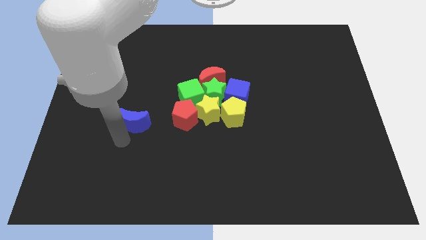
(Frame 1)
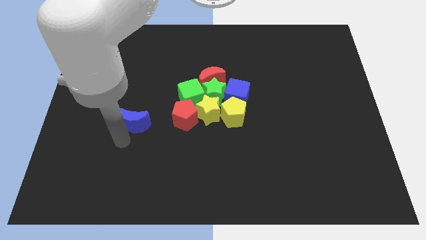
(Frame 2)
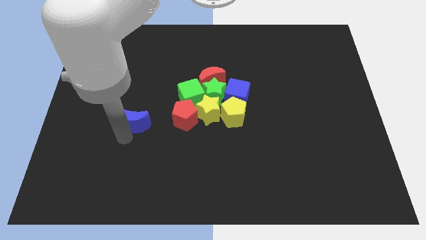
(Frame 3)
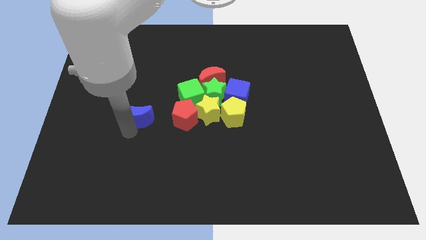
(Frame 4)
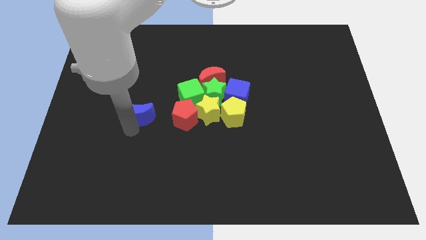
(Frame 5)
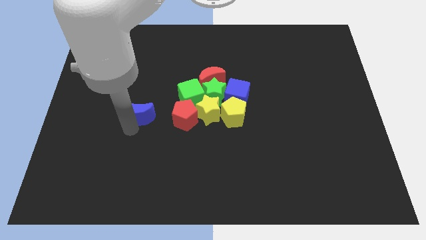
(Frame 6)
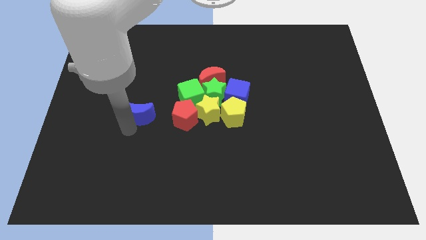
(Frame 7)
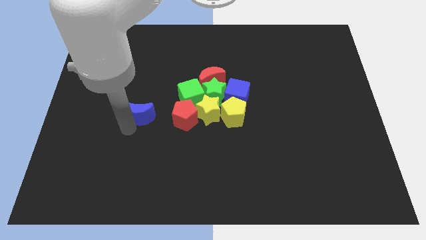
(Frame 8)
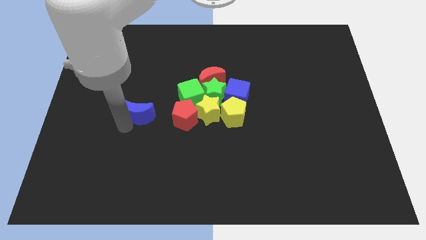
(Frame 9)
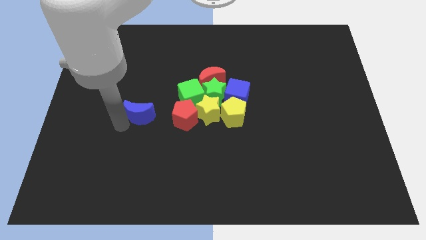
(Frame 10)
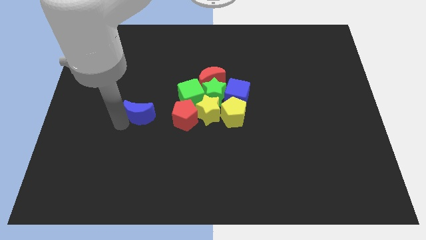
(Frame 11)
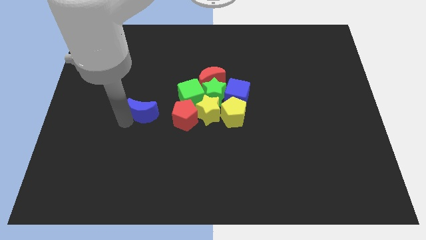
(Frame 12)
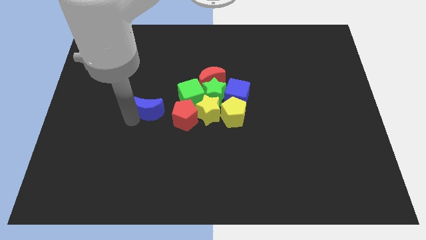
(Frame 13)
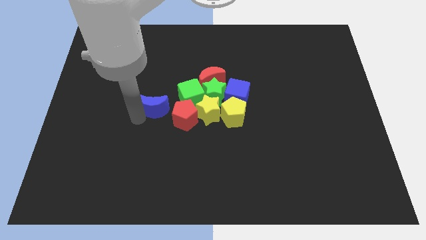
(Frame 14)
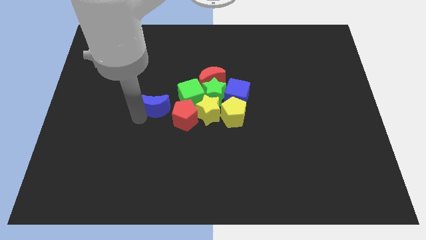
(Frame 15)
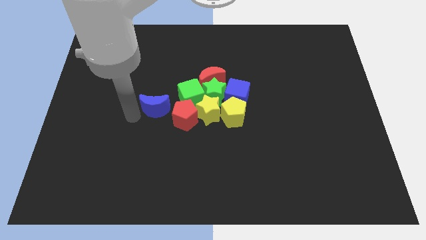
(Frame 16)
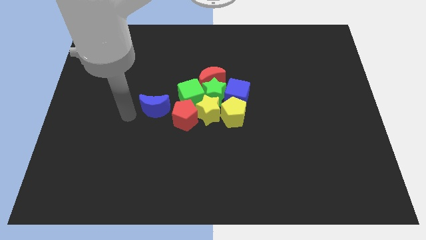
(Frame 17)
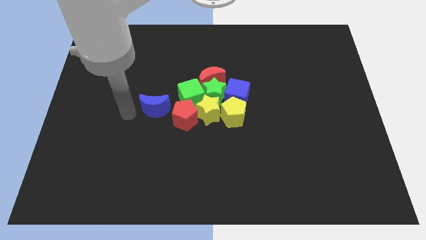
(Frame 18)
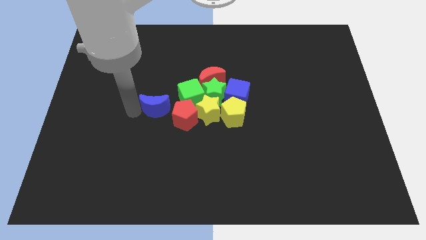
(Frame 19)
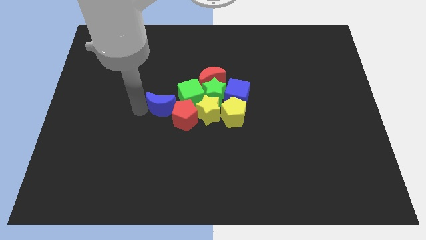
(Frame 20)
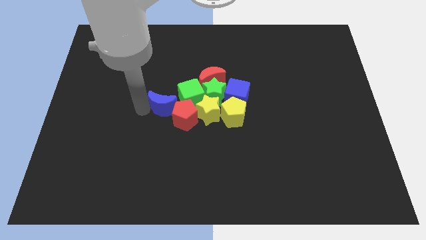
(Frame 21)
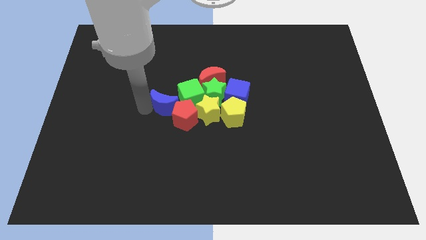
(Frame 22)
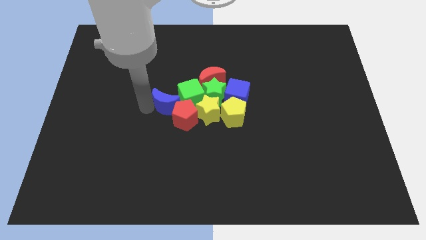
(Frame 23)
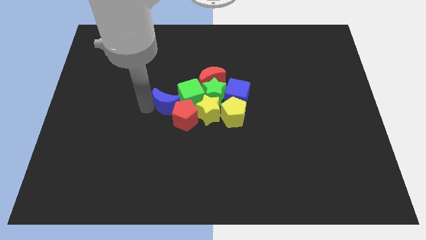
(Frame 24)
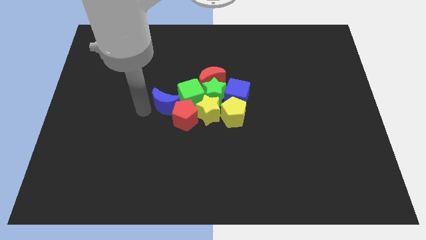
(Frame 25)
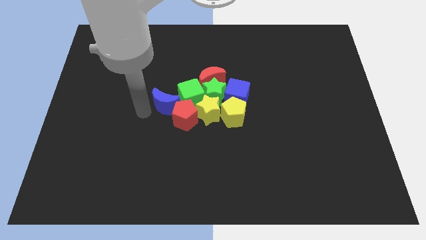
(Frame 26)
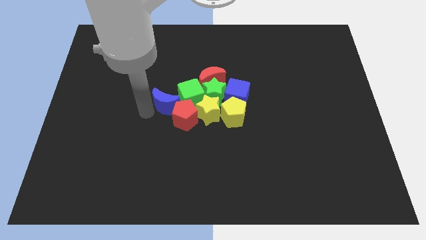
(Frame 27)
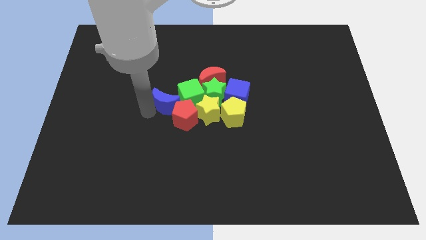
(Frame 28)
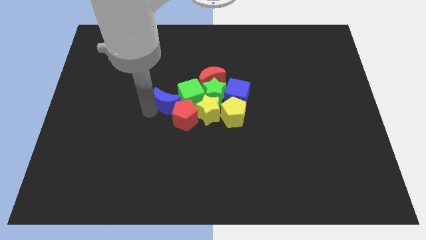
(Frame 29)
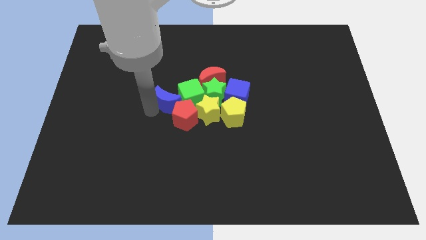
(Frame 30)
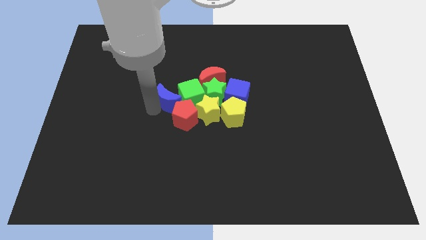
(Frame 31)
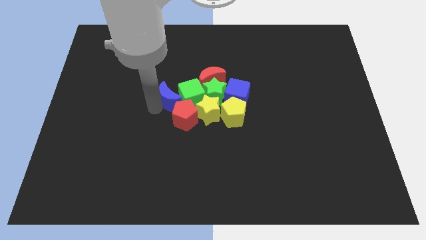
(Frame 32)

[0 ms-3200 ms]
place the blue moon to the left of the green cube

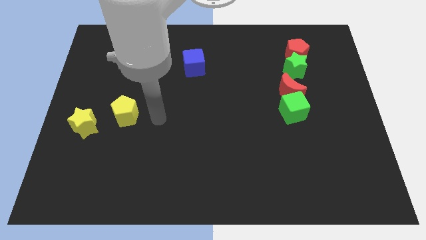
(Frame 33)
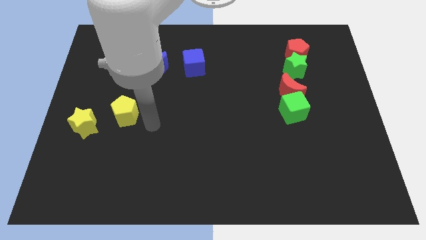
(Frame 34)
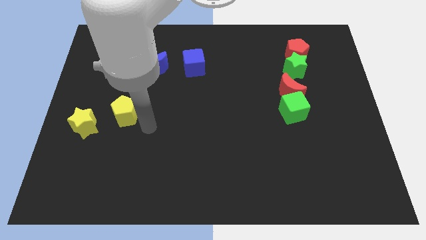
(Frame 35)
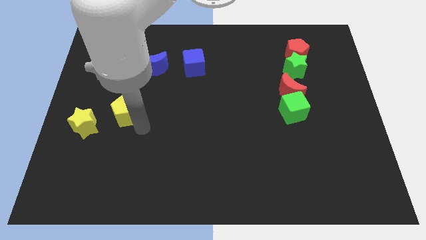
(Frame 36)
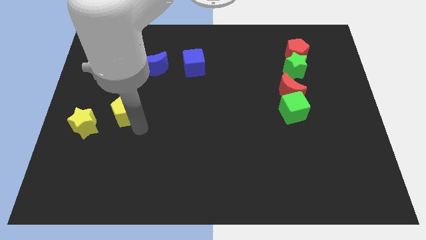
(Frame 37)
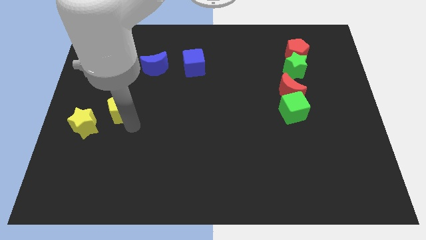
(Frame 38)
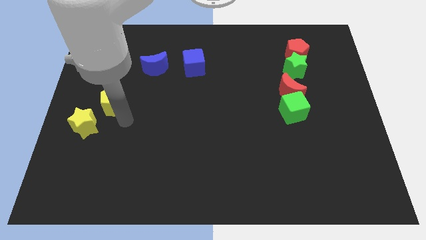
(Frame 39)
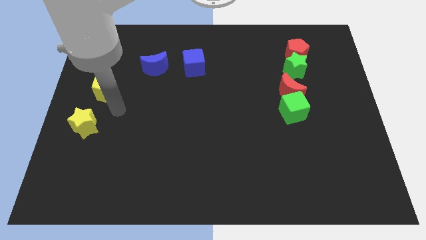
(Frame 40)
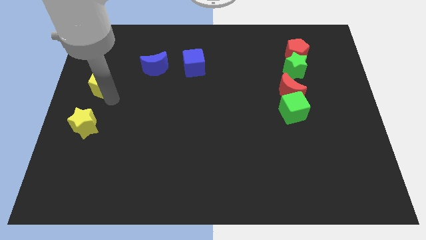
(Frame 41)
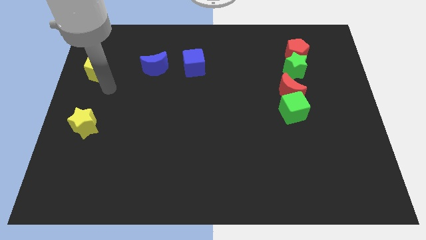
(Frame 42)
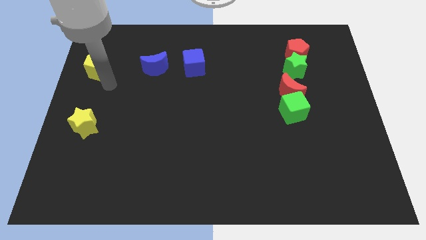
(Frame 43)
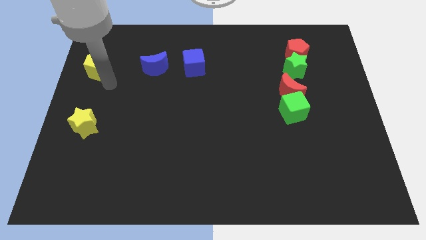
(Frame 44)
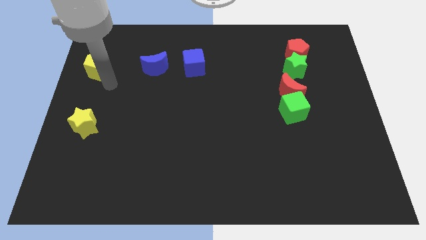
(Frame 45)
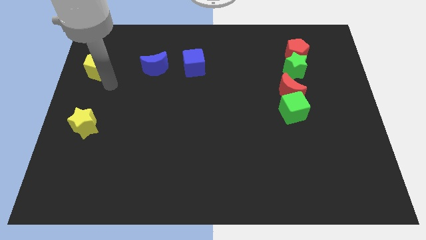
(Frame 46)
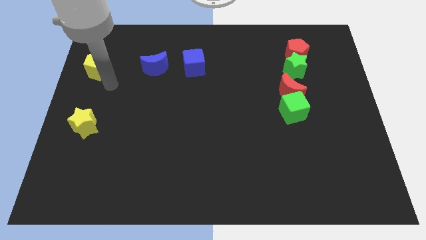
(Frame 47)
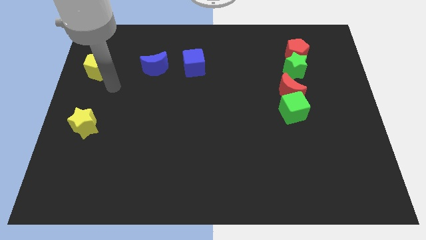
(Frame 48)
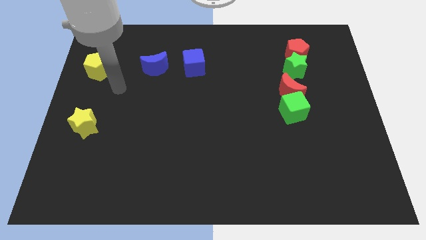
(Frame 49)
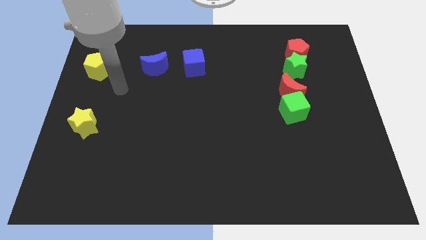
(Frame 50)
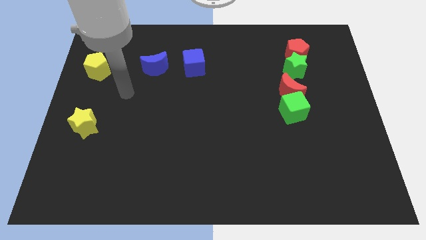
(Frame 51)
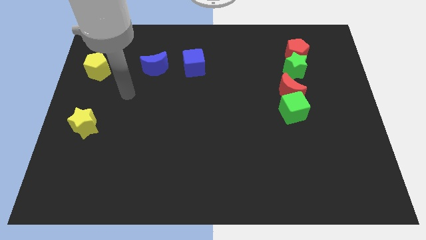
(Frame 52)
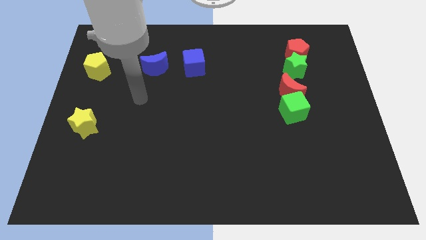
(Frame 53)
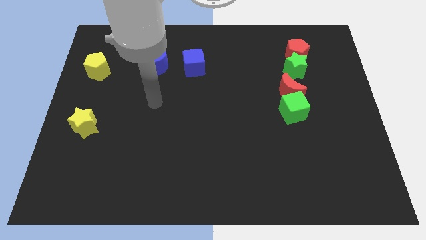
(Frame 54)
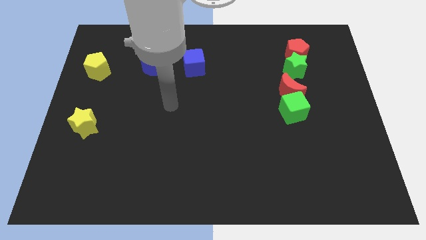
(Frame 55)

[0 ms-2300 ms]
place the yellow pwntagon to the left of the blue moon

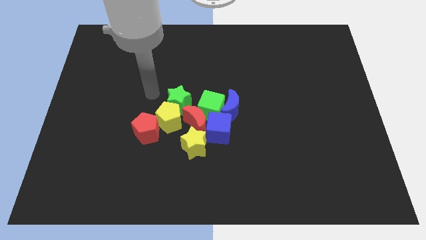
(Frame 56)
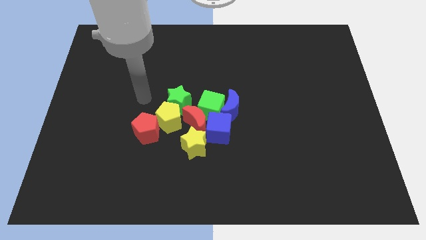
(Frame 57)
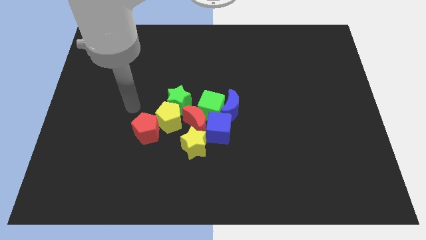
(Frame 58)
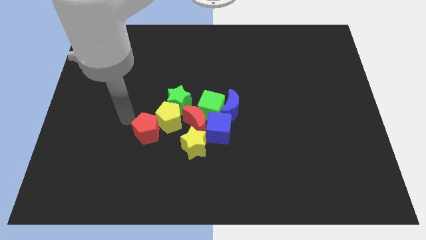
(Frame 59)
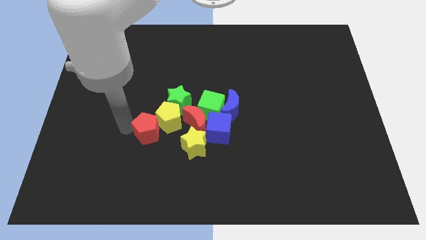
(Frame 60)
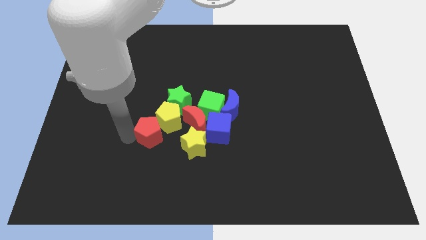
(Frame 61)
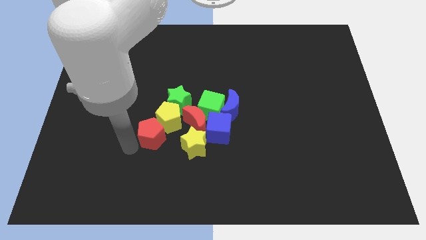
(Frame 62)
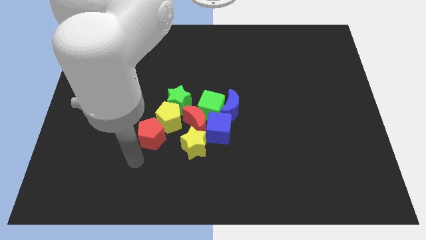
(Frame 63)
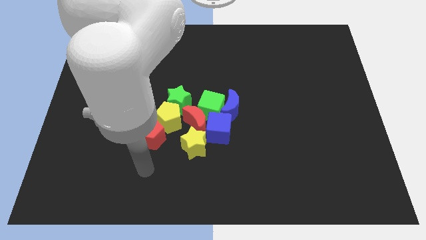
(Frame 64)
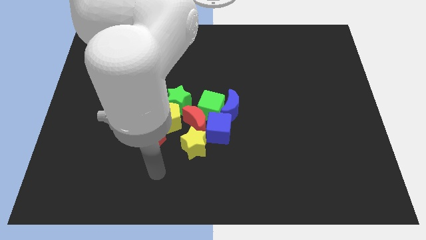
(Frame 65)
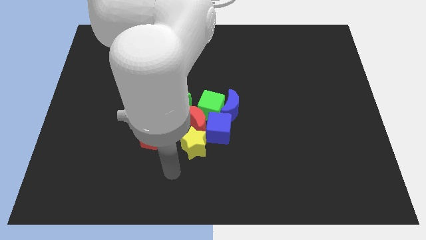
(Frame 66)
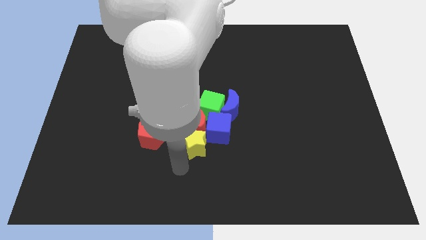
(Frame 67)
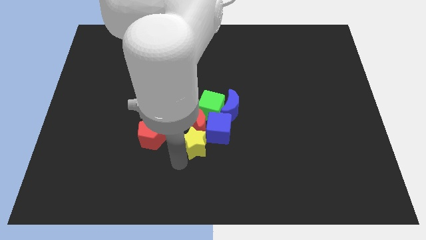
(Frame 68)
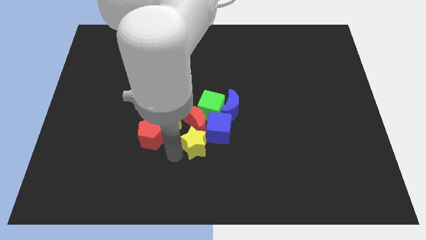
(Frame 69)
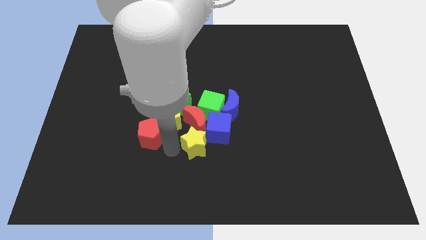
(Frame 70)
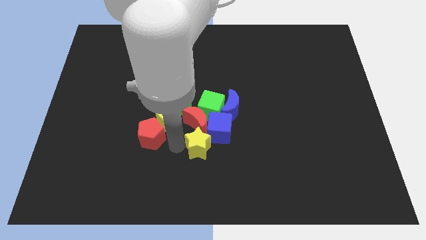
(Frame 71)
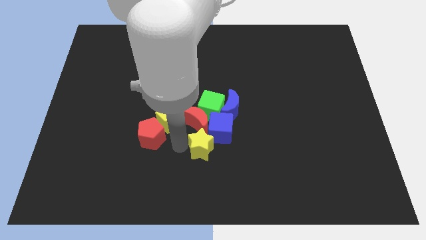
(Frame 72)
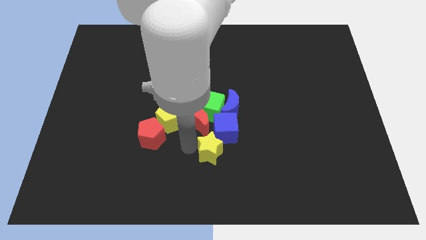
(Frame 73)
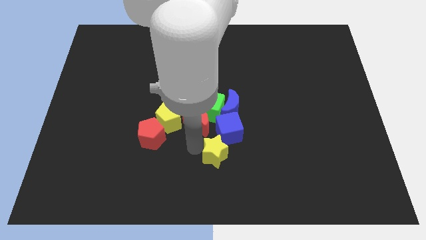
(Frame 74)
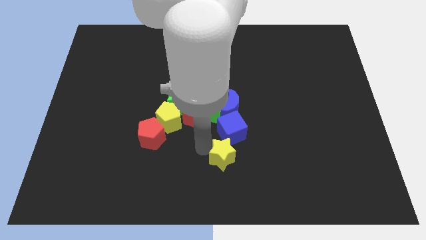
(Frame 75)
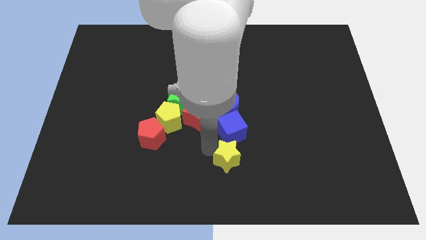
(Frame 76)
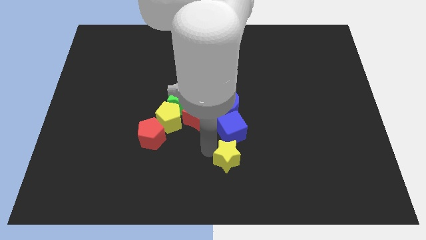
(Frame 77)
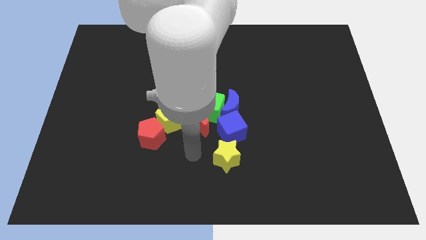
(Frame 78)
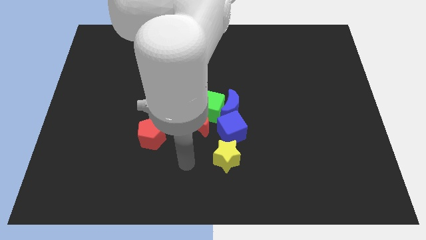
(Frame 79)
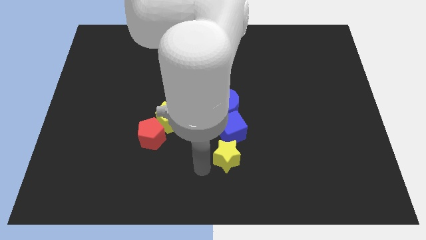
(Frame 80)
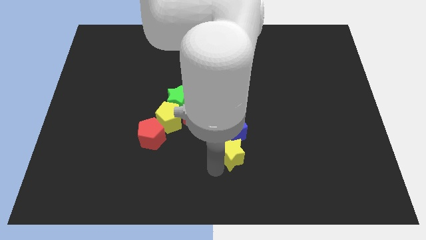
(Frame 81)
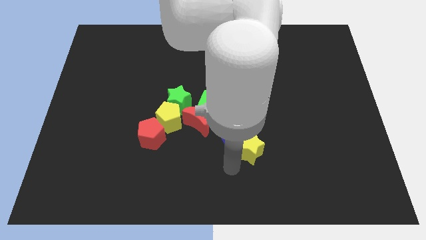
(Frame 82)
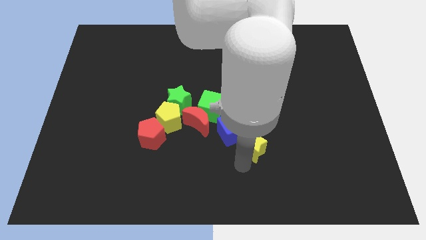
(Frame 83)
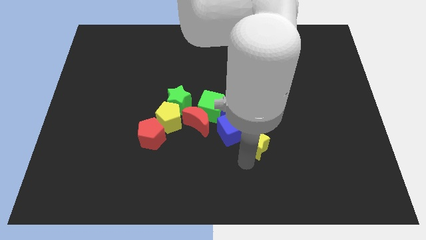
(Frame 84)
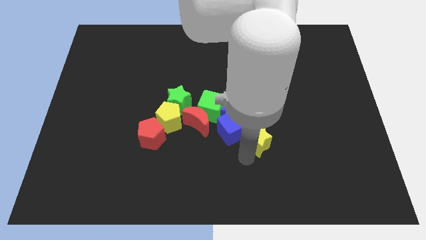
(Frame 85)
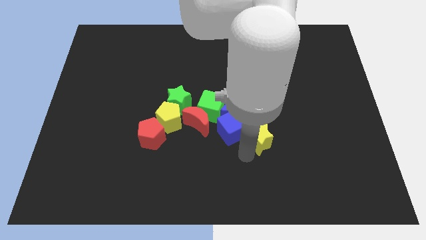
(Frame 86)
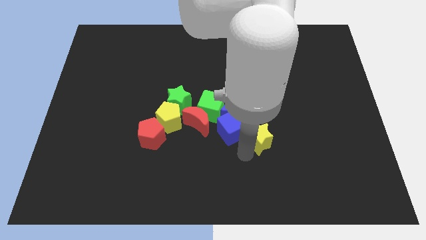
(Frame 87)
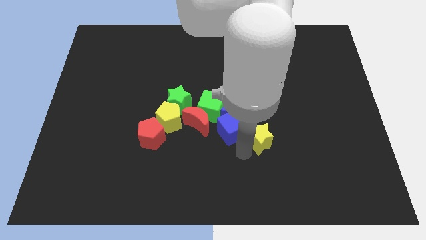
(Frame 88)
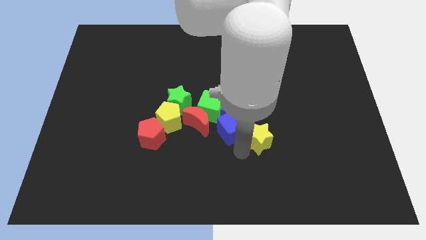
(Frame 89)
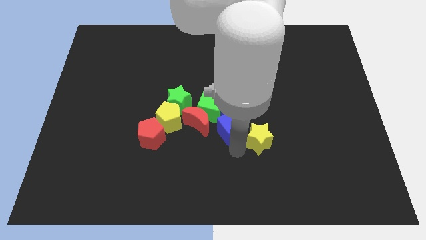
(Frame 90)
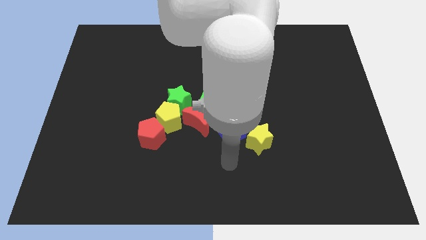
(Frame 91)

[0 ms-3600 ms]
move the yellow star to the right of the blue cube
